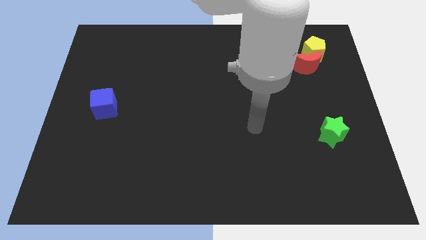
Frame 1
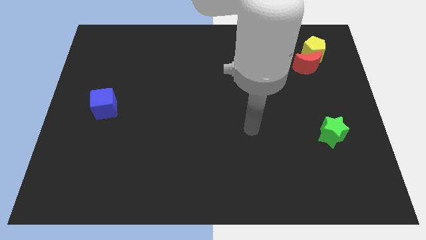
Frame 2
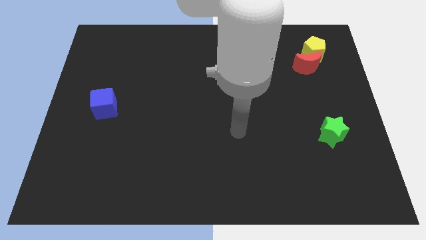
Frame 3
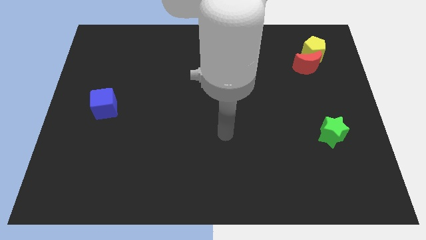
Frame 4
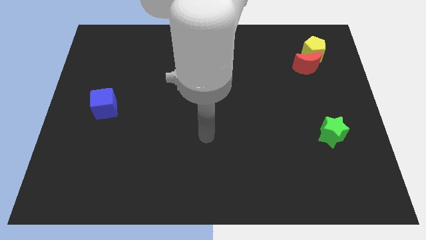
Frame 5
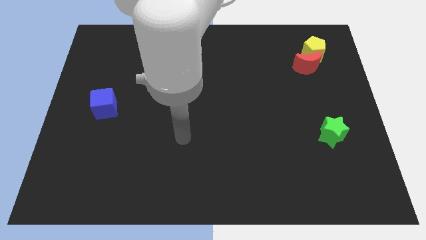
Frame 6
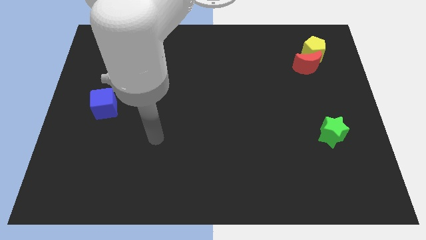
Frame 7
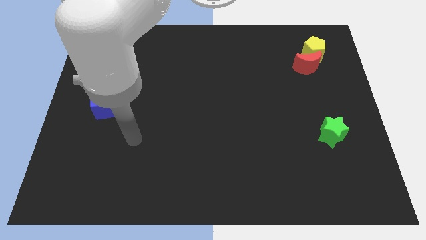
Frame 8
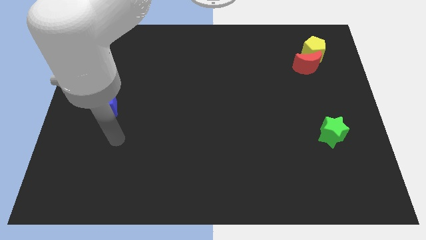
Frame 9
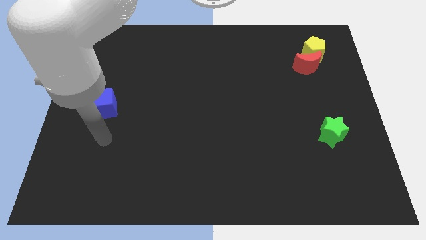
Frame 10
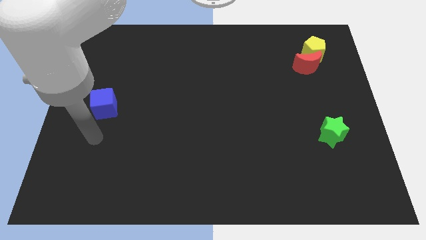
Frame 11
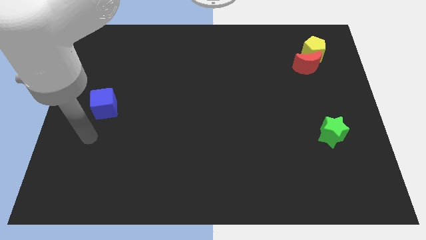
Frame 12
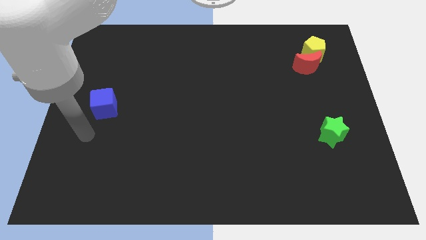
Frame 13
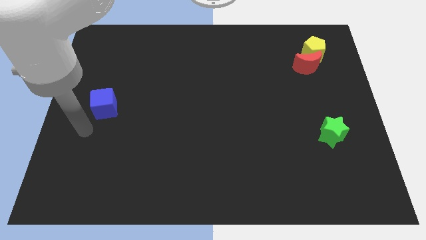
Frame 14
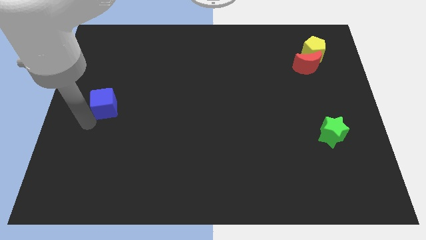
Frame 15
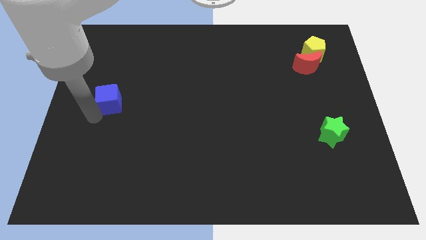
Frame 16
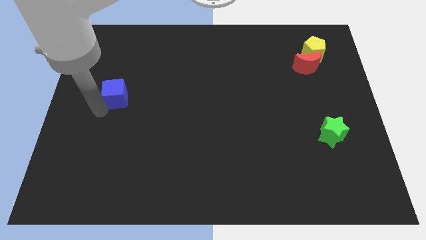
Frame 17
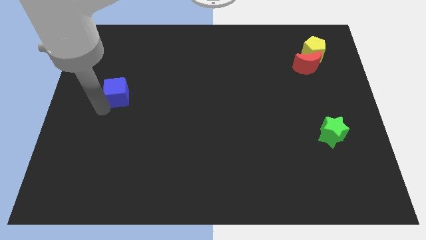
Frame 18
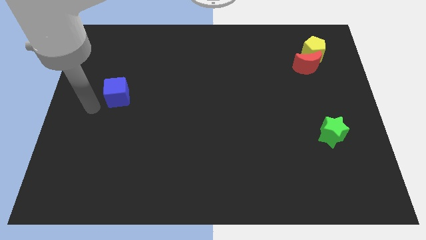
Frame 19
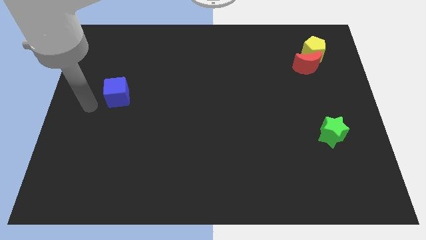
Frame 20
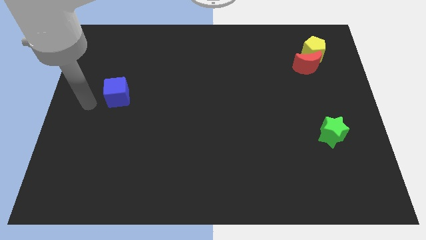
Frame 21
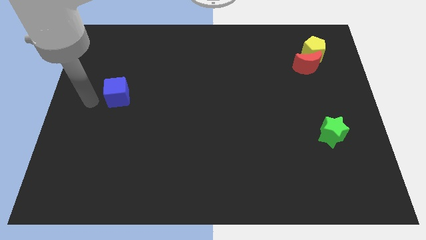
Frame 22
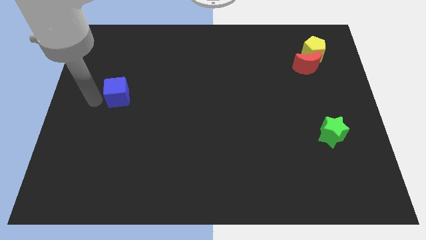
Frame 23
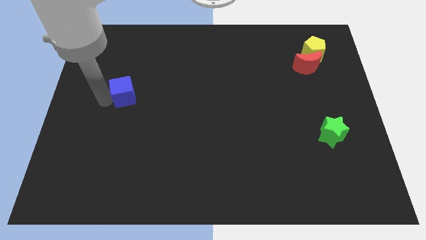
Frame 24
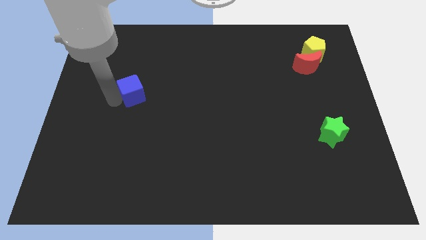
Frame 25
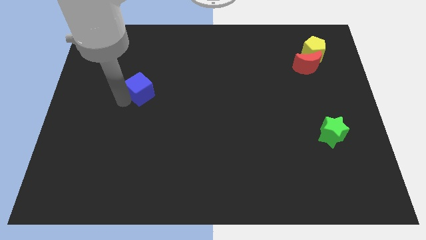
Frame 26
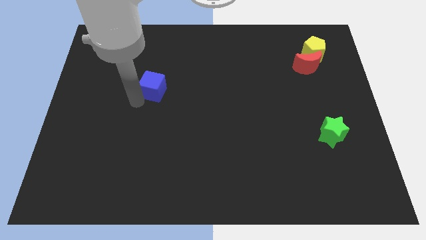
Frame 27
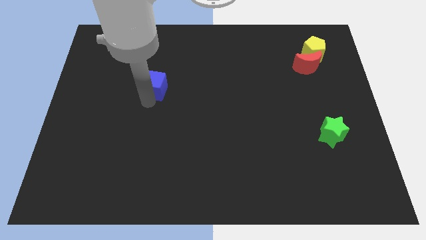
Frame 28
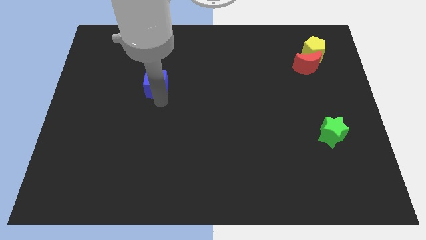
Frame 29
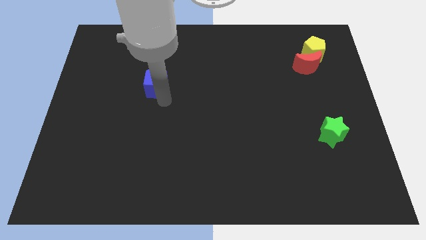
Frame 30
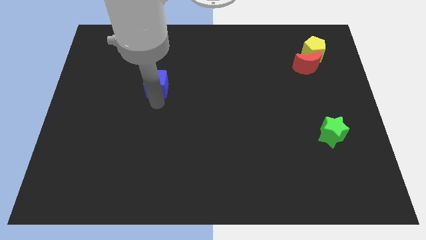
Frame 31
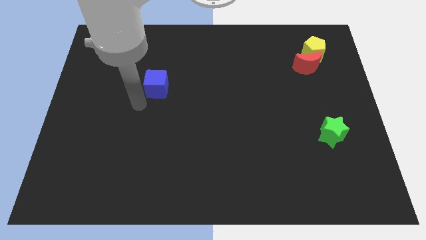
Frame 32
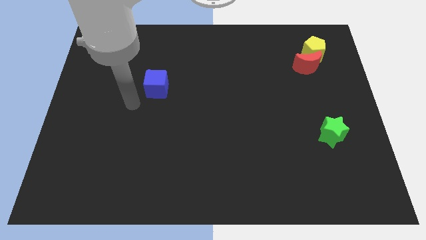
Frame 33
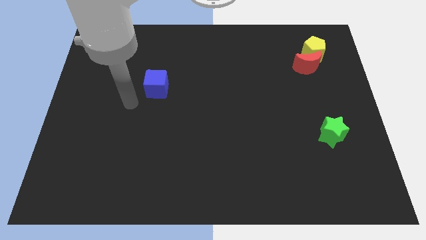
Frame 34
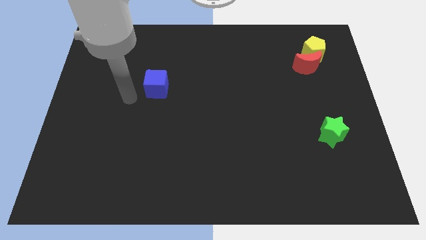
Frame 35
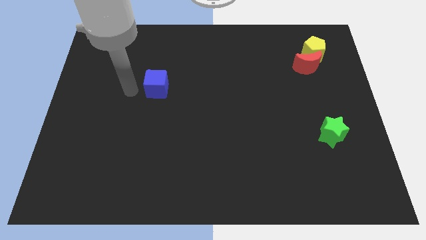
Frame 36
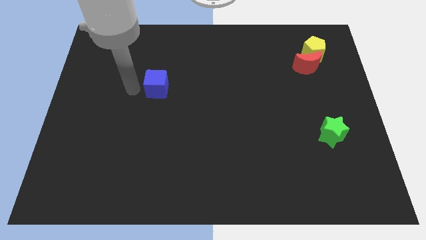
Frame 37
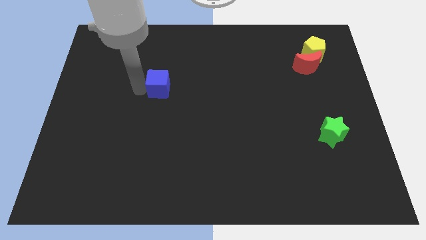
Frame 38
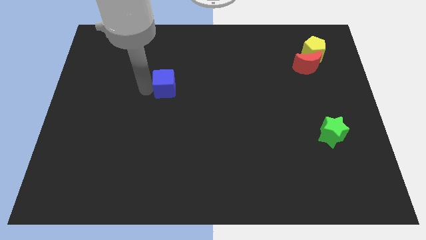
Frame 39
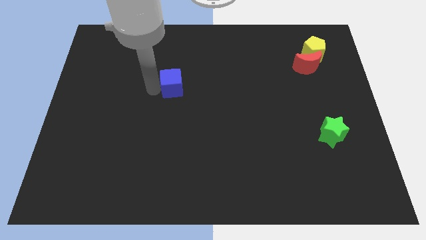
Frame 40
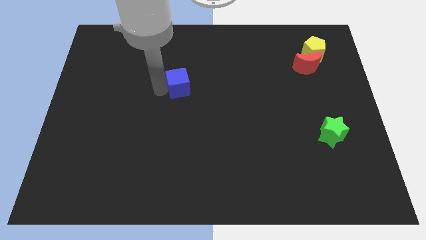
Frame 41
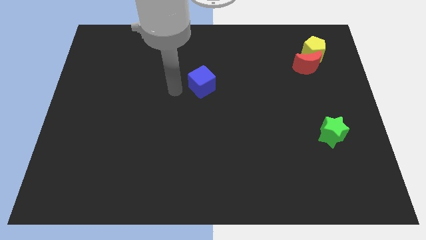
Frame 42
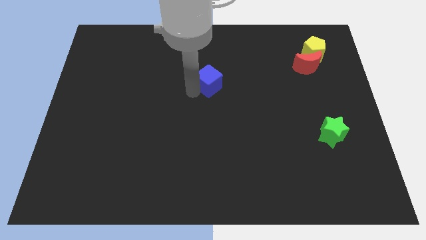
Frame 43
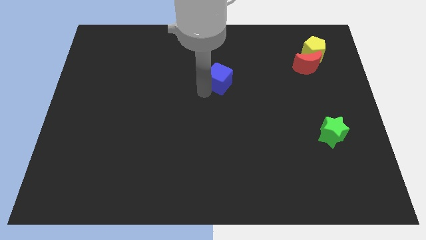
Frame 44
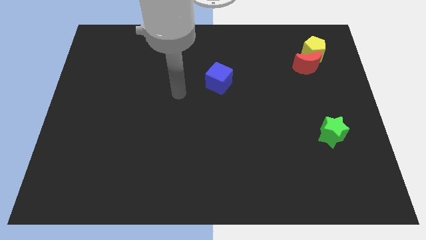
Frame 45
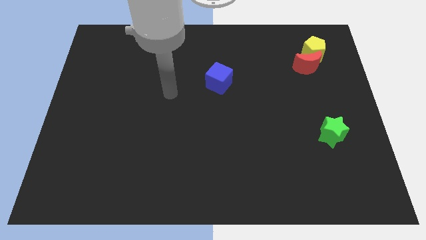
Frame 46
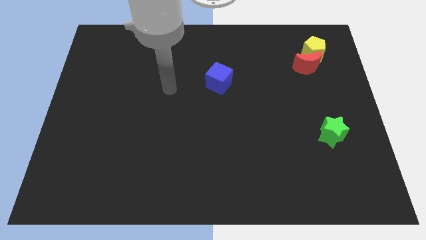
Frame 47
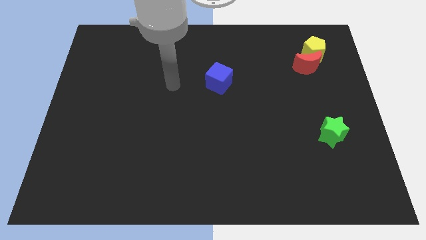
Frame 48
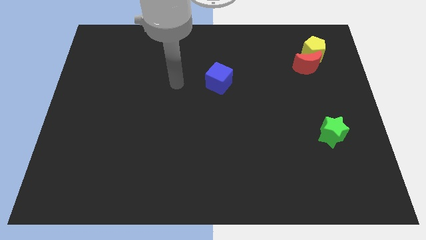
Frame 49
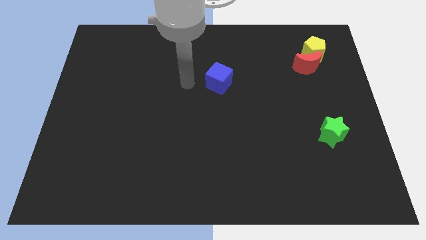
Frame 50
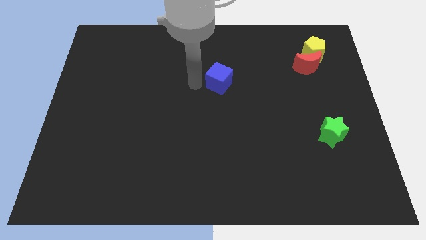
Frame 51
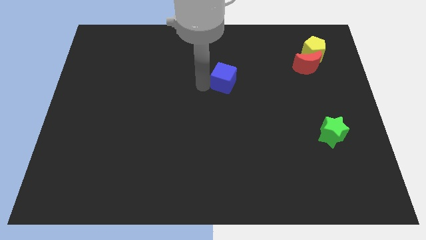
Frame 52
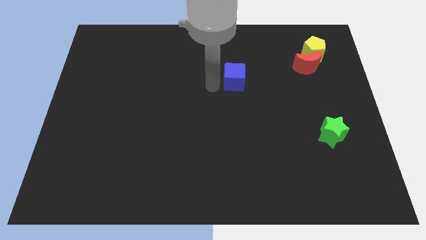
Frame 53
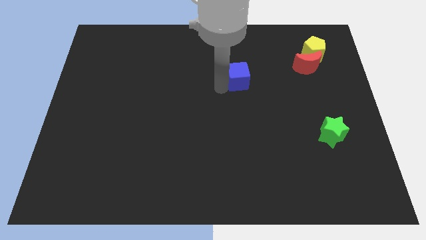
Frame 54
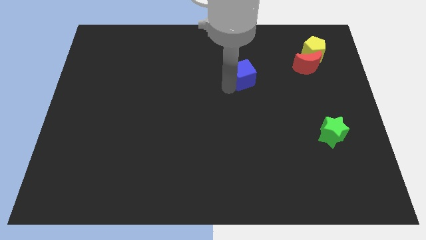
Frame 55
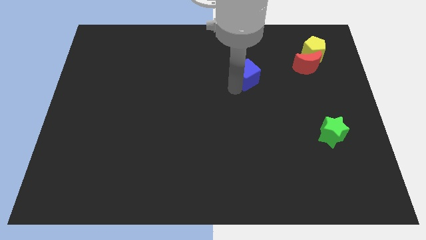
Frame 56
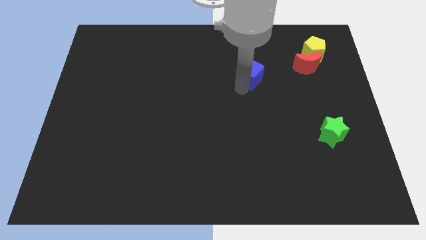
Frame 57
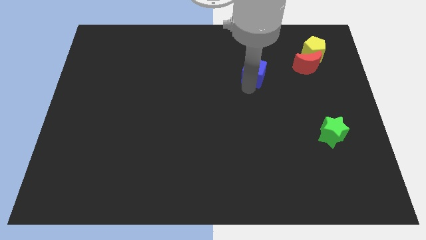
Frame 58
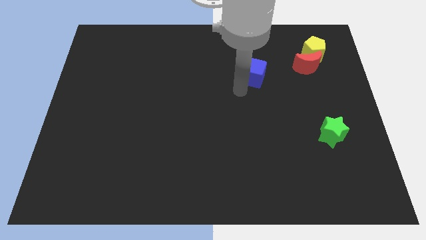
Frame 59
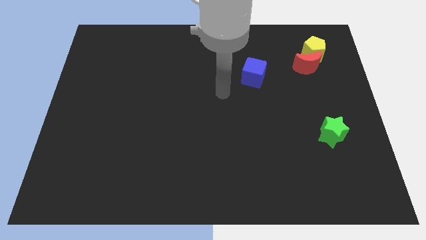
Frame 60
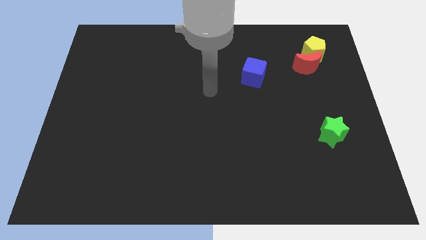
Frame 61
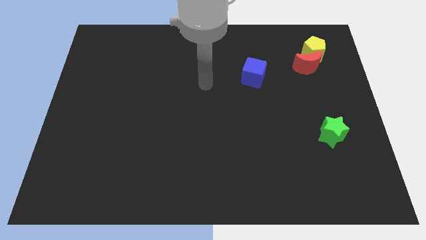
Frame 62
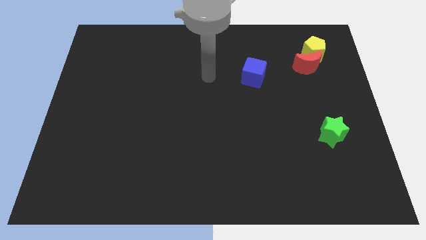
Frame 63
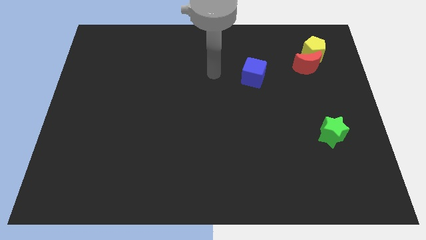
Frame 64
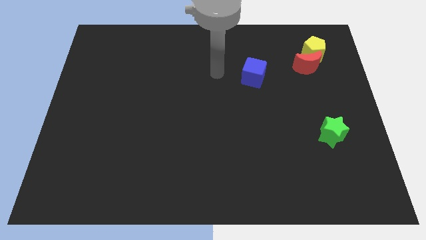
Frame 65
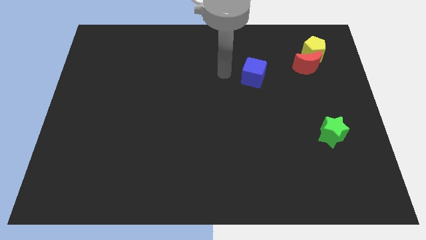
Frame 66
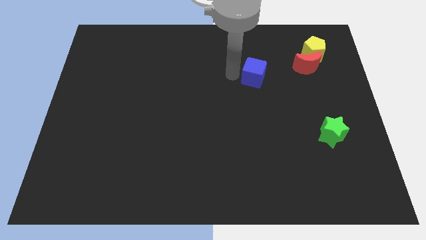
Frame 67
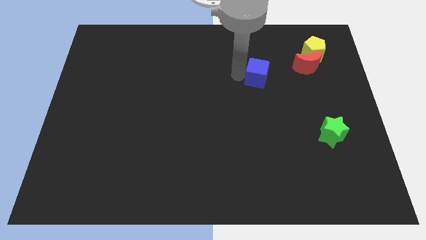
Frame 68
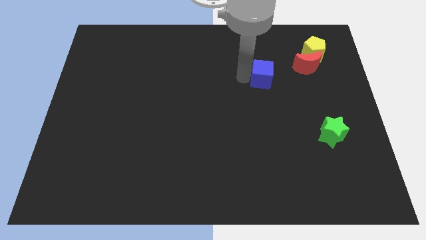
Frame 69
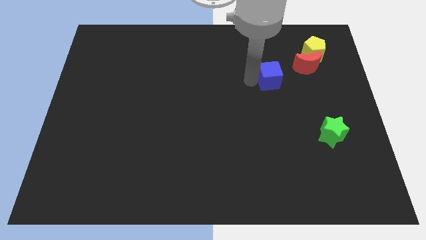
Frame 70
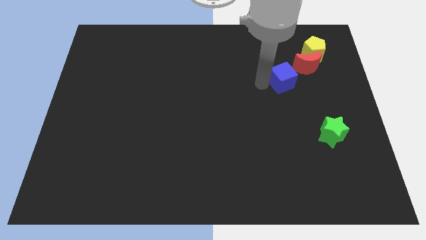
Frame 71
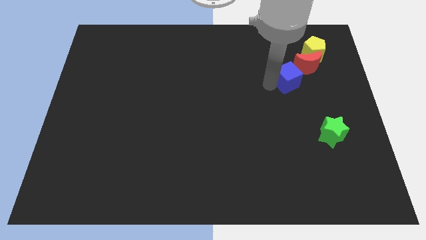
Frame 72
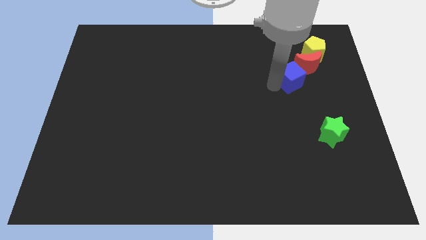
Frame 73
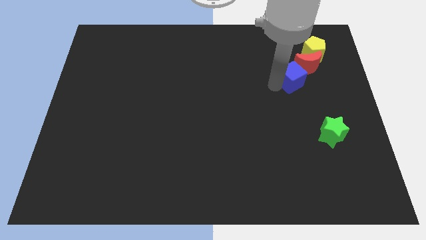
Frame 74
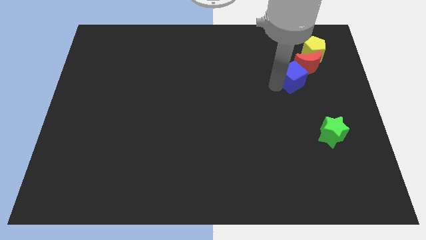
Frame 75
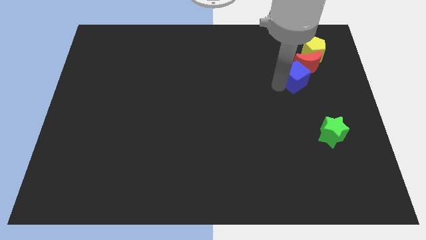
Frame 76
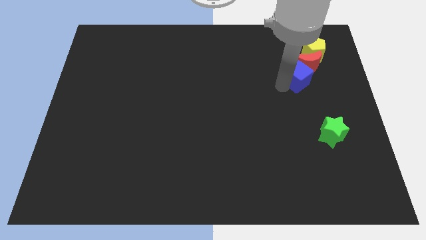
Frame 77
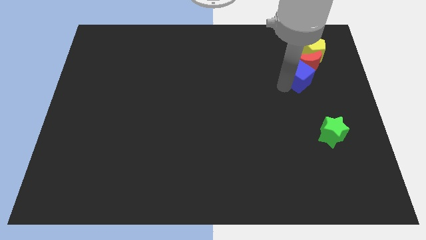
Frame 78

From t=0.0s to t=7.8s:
move the blue cube next to the red moon

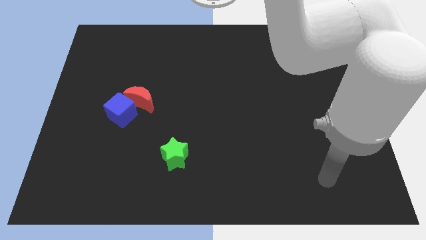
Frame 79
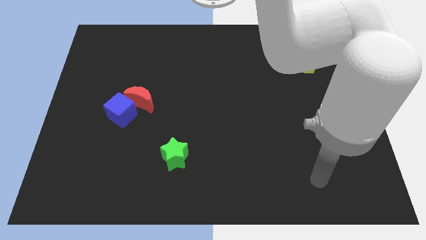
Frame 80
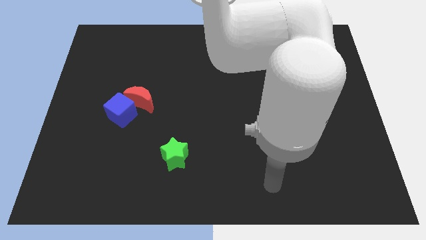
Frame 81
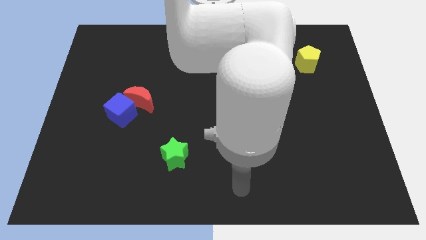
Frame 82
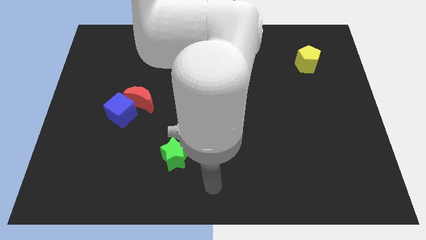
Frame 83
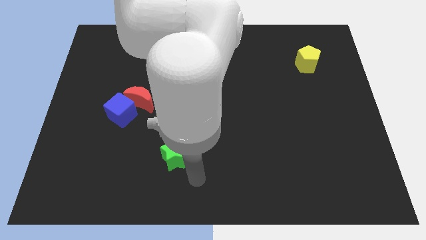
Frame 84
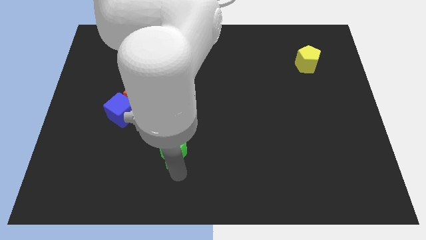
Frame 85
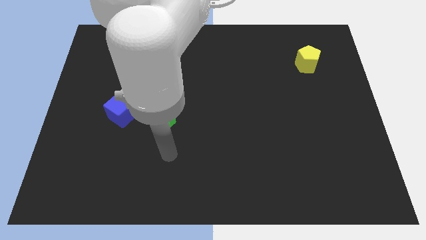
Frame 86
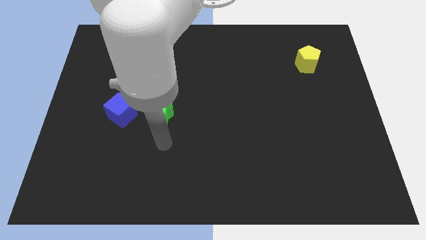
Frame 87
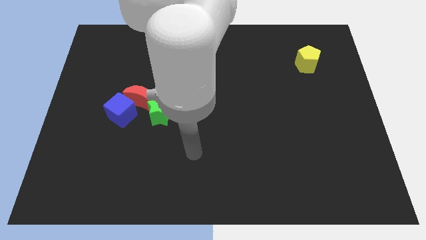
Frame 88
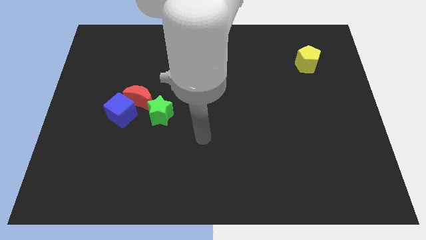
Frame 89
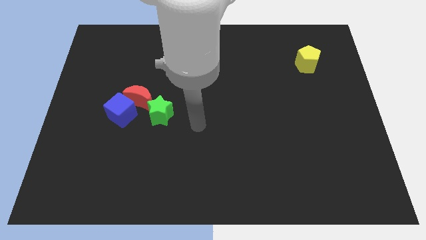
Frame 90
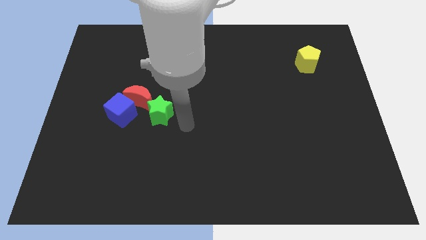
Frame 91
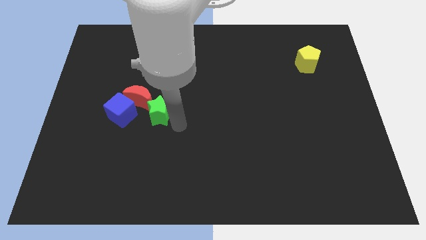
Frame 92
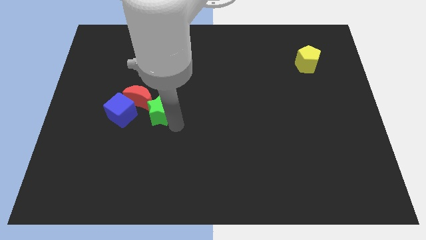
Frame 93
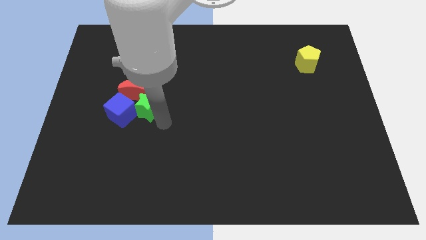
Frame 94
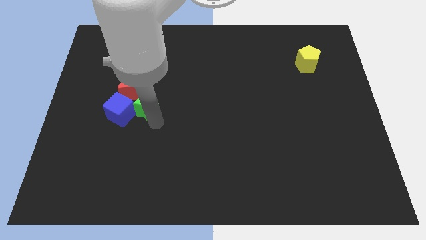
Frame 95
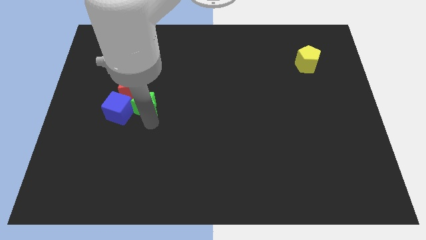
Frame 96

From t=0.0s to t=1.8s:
slide the star towards the blue block
